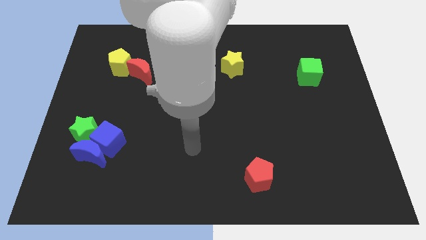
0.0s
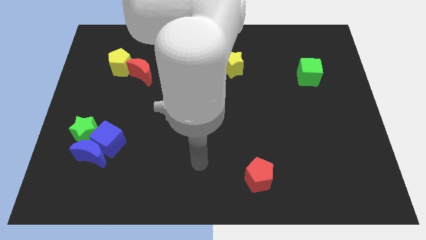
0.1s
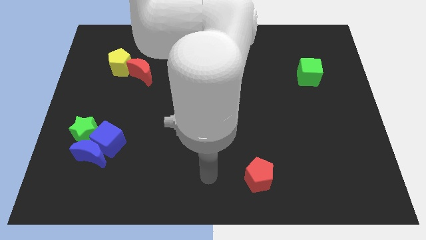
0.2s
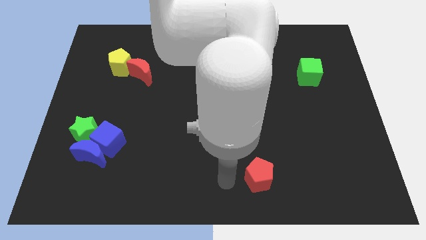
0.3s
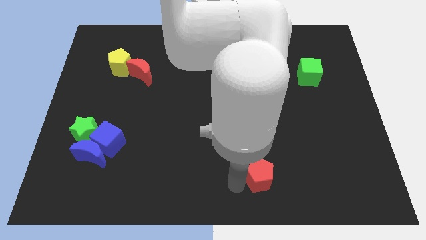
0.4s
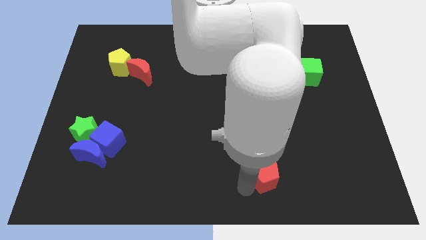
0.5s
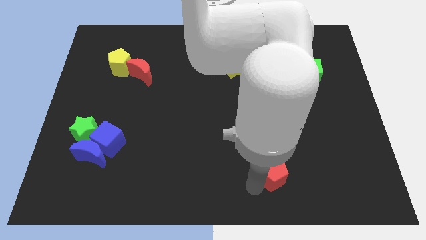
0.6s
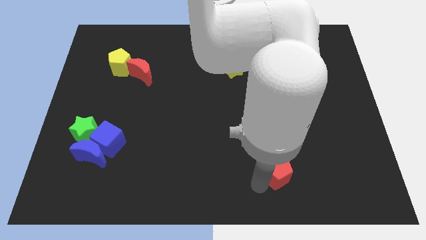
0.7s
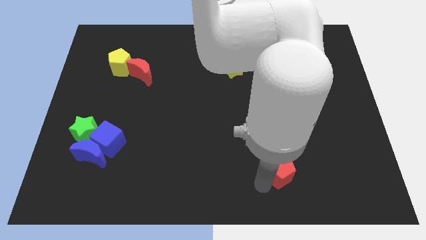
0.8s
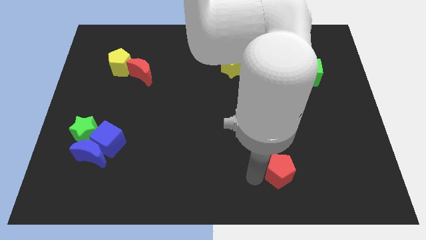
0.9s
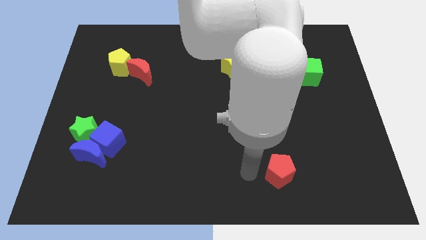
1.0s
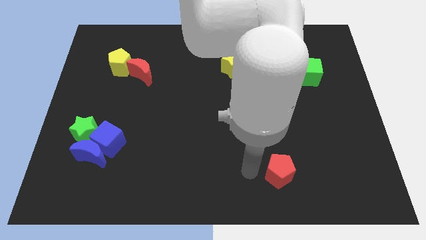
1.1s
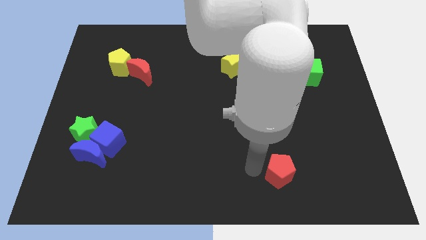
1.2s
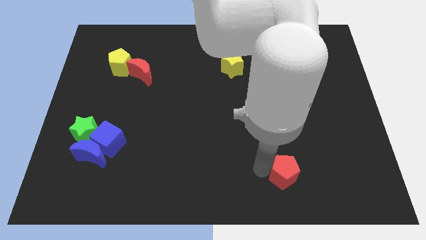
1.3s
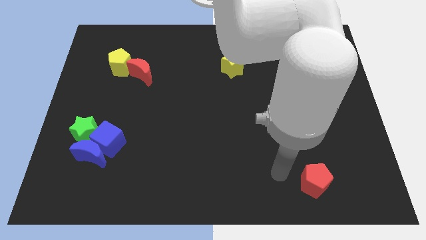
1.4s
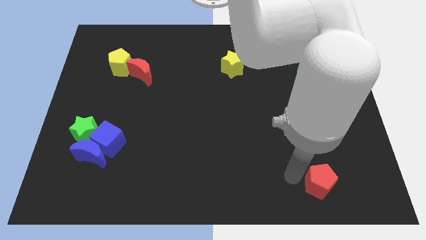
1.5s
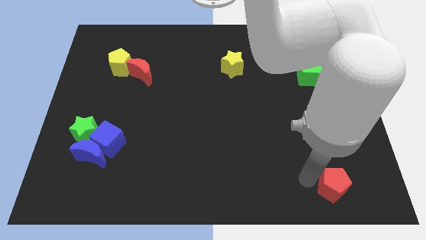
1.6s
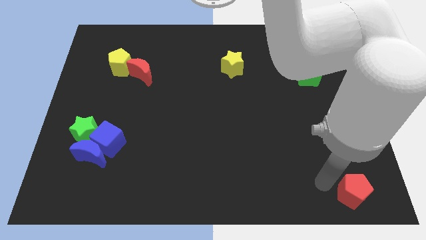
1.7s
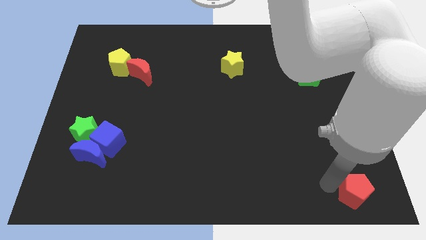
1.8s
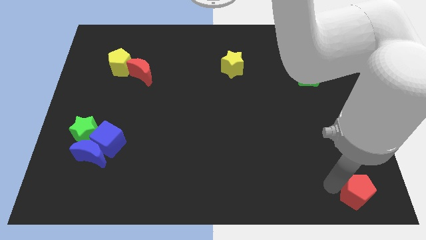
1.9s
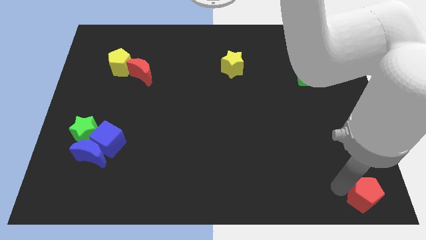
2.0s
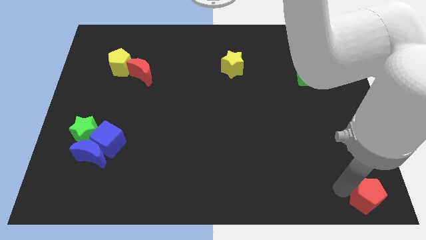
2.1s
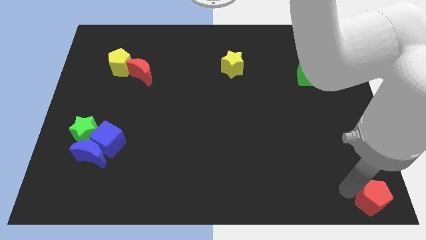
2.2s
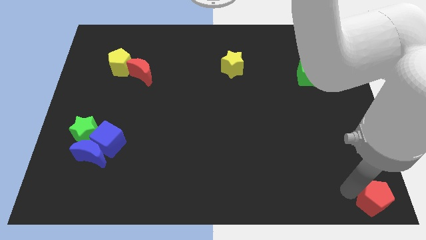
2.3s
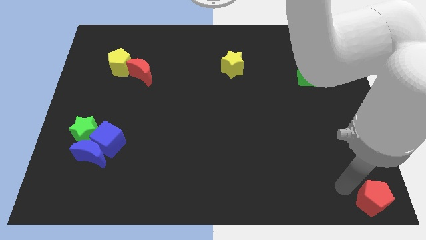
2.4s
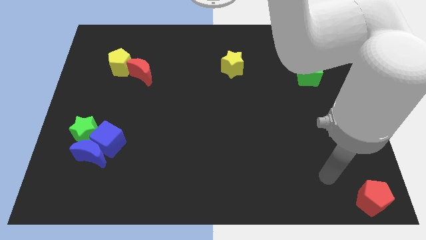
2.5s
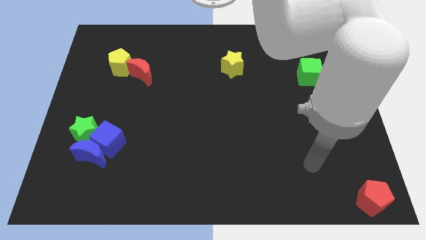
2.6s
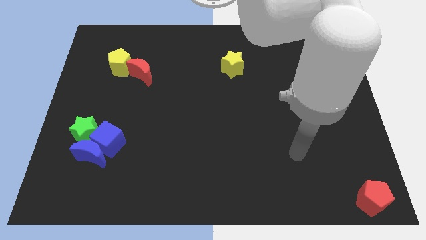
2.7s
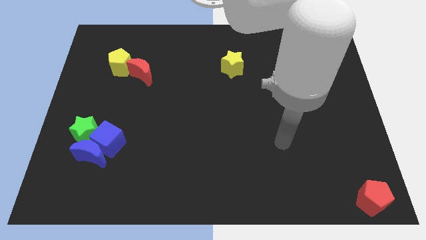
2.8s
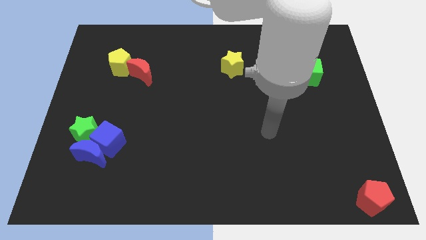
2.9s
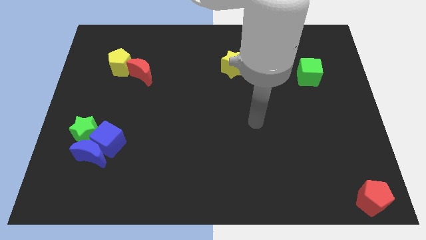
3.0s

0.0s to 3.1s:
push red pentagon to the bottom right

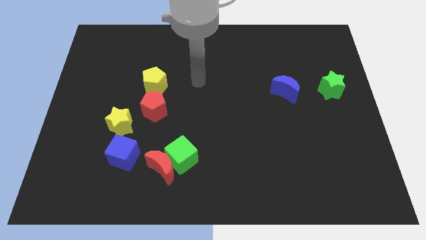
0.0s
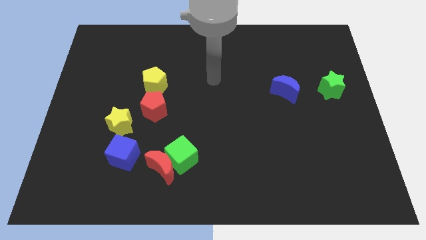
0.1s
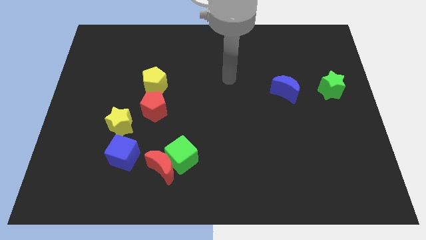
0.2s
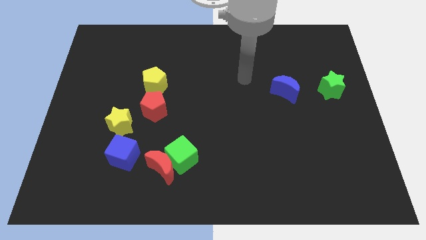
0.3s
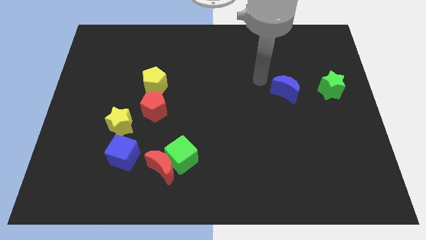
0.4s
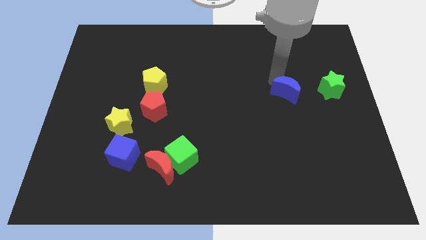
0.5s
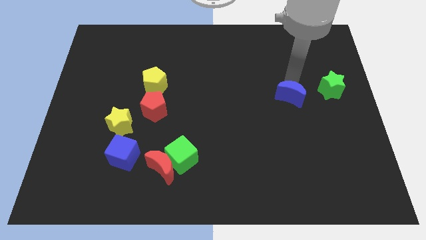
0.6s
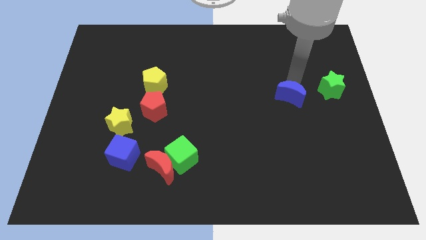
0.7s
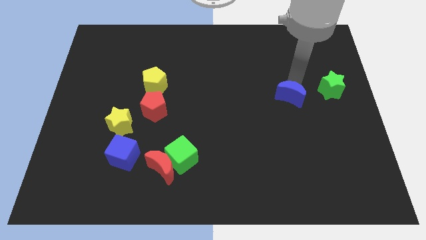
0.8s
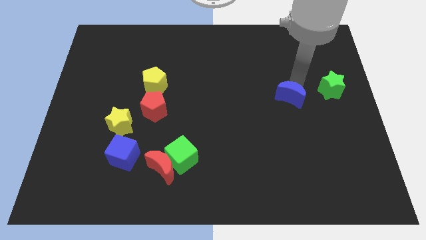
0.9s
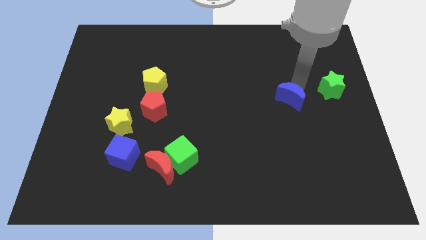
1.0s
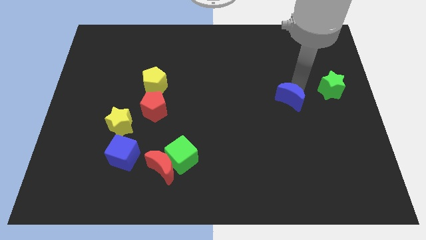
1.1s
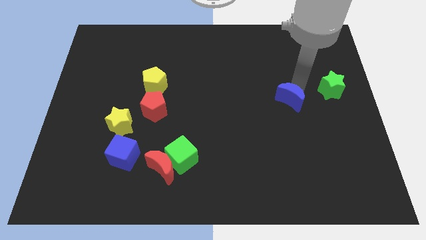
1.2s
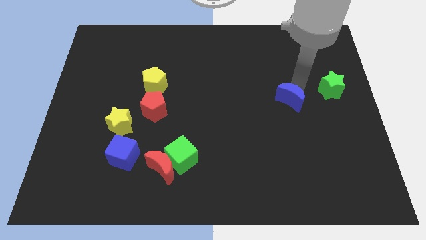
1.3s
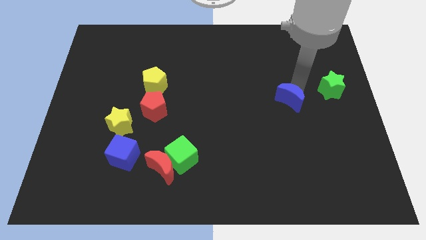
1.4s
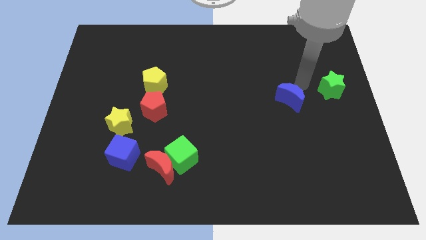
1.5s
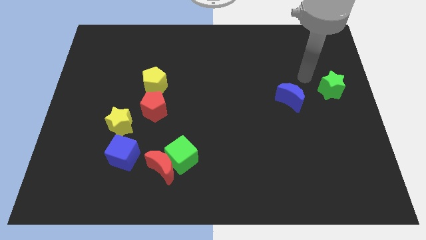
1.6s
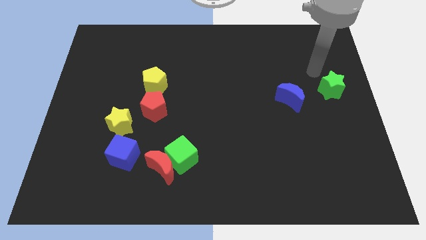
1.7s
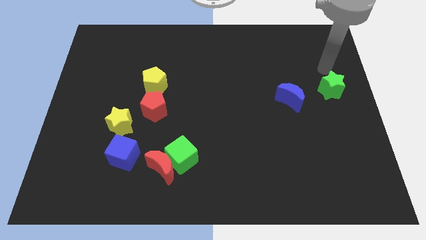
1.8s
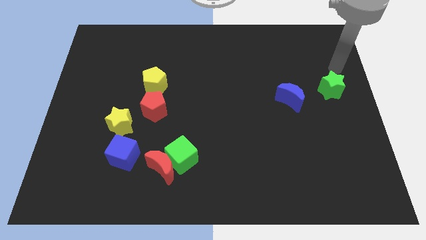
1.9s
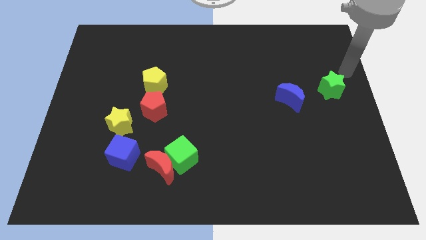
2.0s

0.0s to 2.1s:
slightly push the blue moon to the bottom side

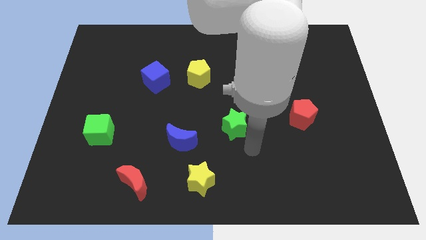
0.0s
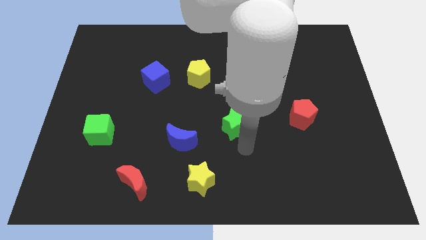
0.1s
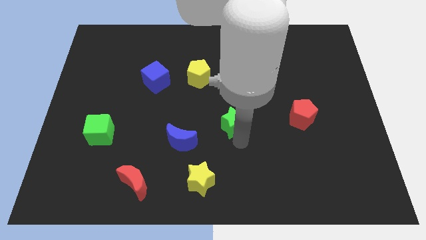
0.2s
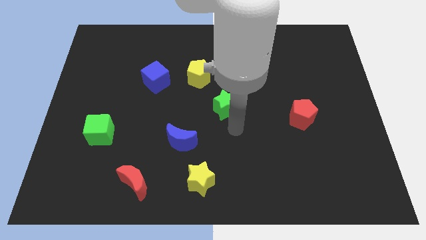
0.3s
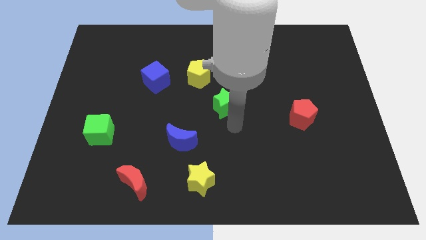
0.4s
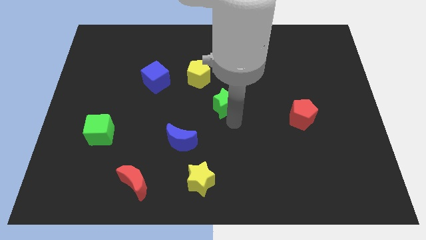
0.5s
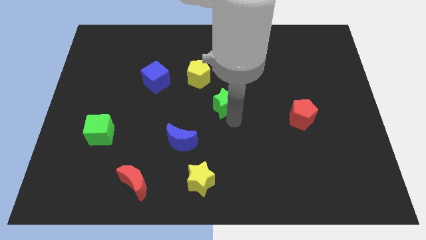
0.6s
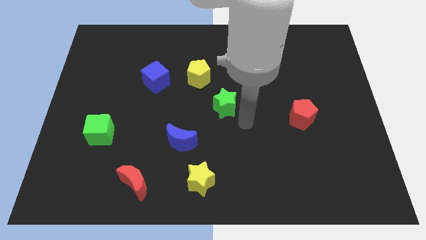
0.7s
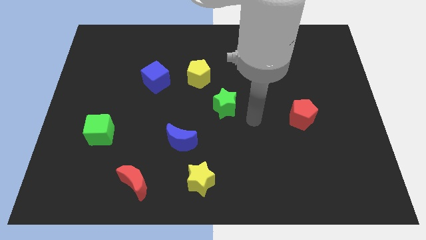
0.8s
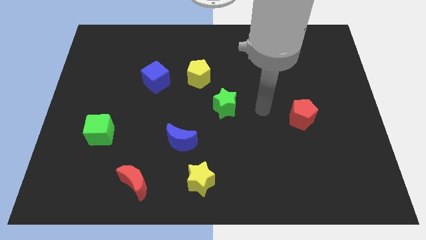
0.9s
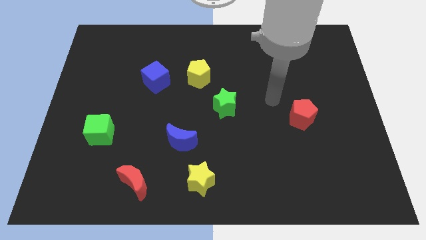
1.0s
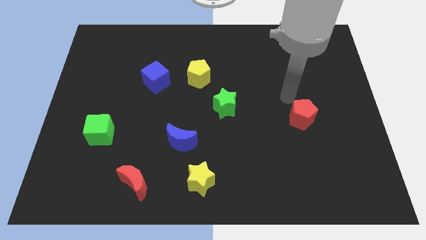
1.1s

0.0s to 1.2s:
slide the green star towards the bottom of the yellow pentagon

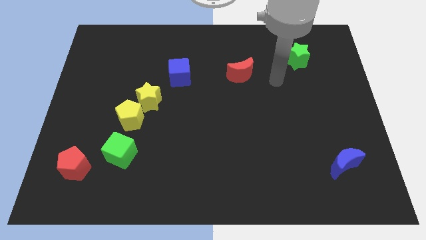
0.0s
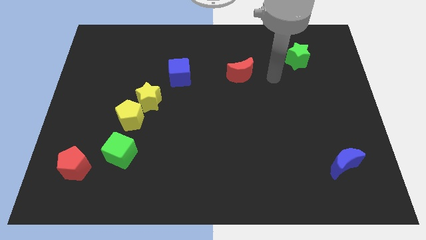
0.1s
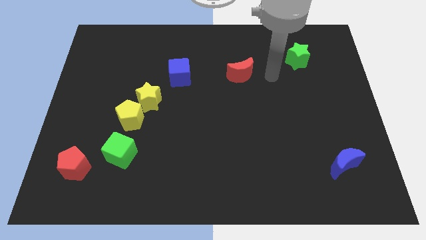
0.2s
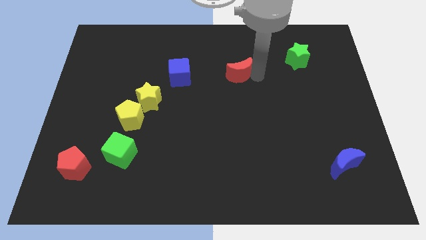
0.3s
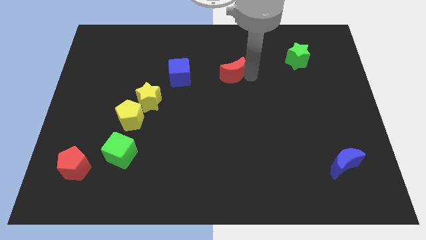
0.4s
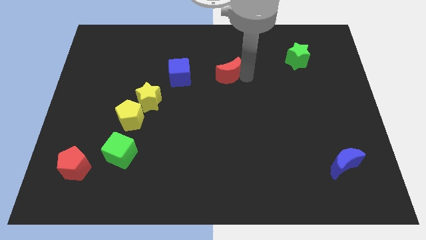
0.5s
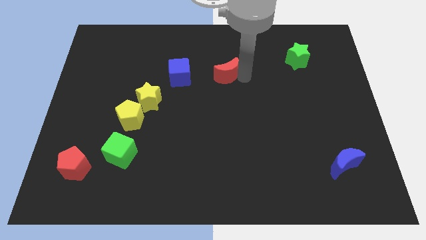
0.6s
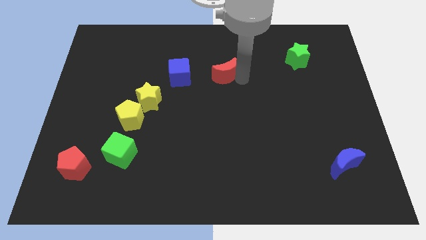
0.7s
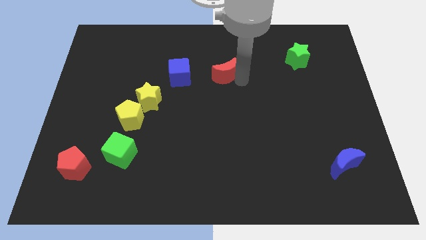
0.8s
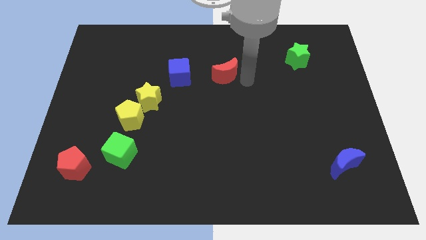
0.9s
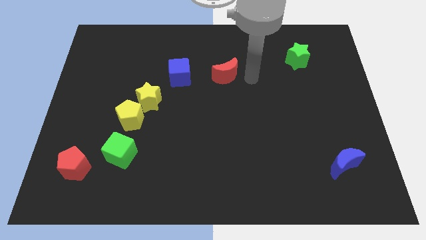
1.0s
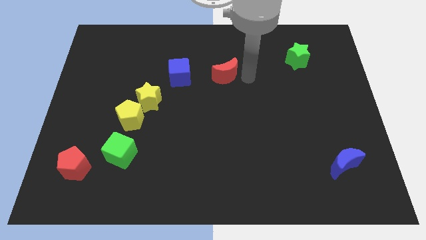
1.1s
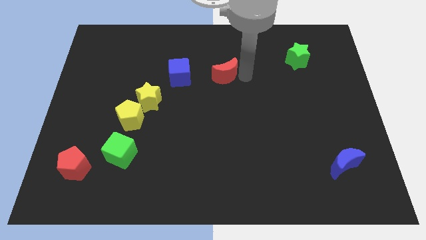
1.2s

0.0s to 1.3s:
push the red crescent to the right side of blue cube

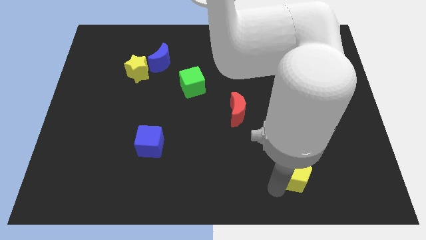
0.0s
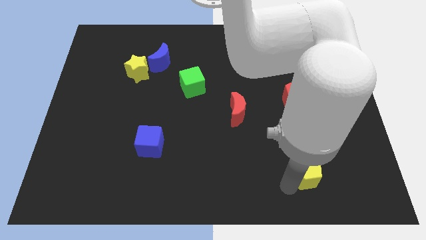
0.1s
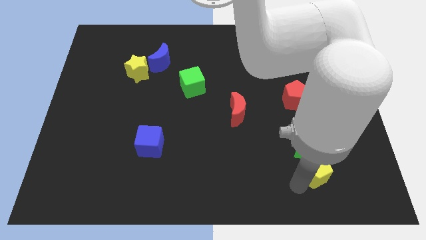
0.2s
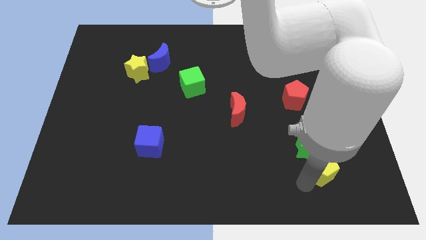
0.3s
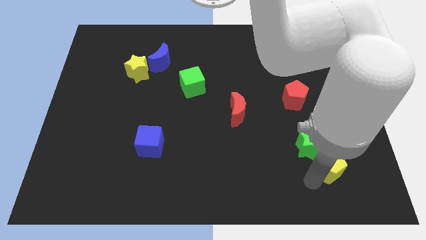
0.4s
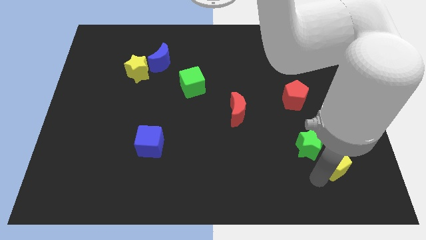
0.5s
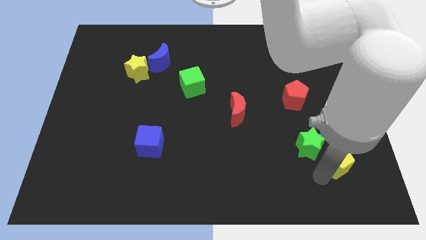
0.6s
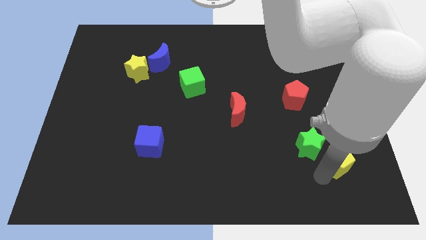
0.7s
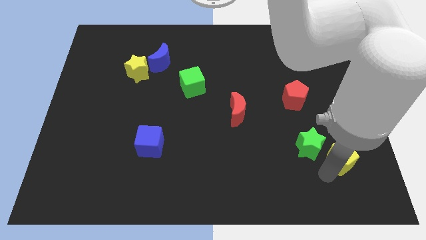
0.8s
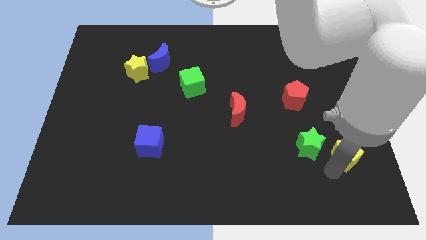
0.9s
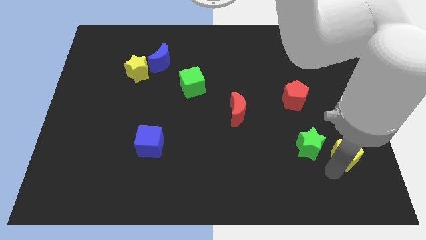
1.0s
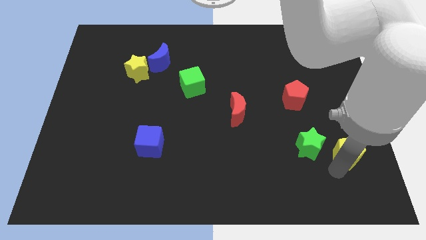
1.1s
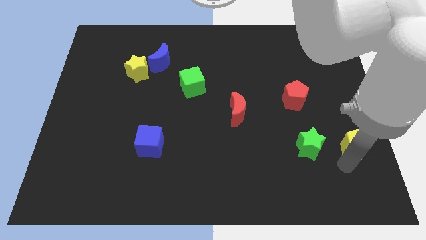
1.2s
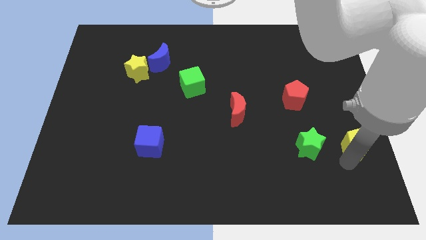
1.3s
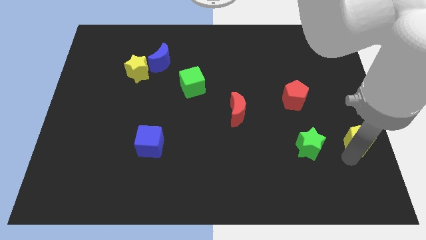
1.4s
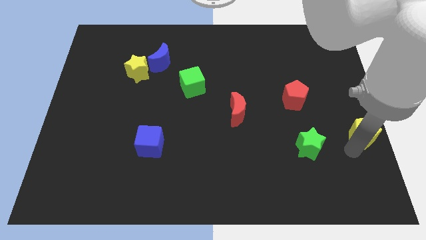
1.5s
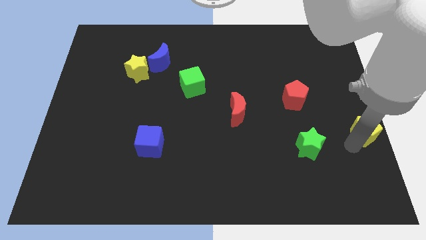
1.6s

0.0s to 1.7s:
push yellow pentagon beside green star
